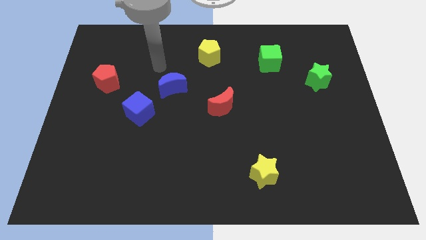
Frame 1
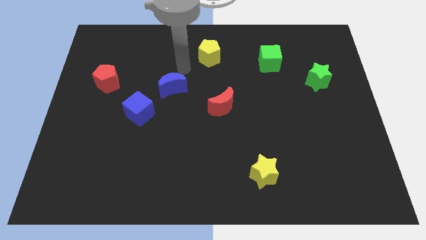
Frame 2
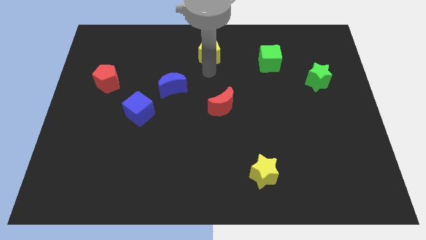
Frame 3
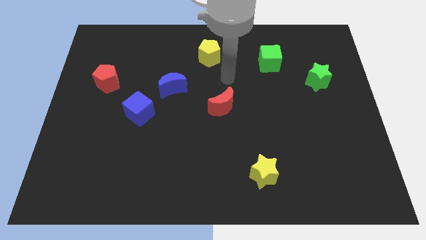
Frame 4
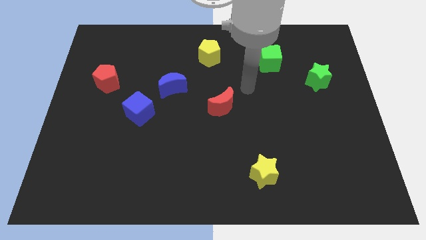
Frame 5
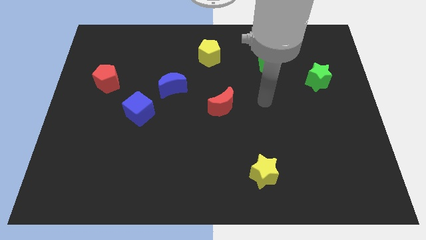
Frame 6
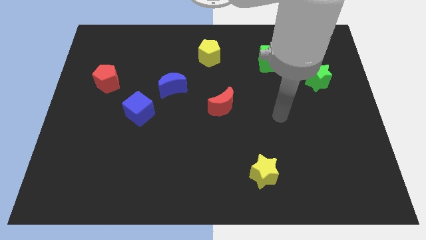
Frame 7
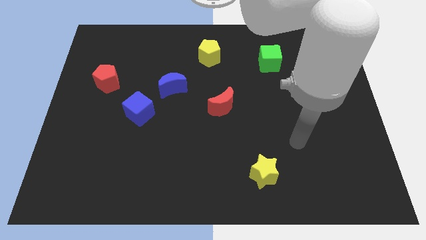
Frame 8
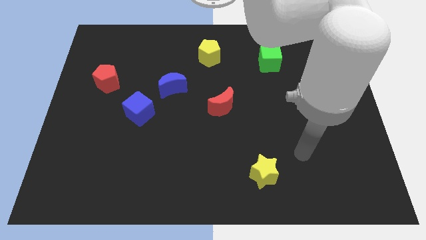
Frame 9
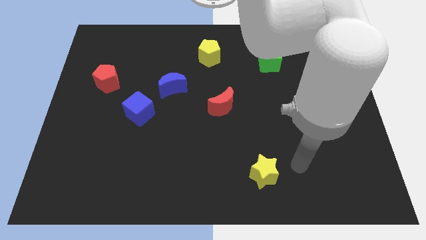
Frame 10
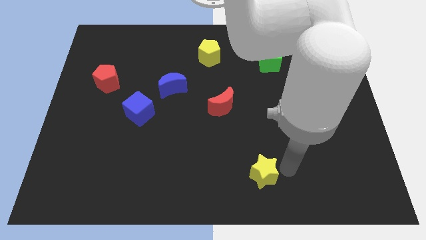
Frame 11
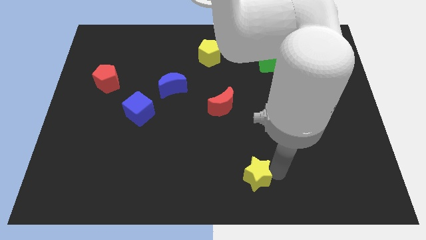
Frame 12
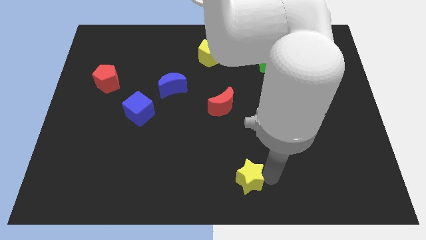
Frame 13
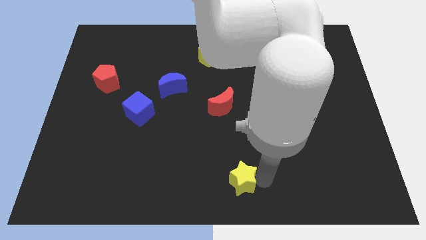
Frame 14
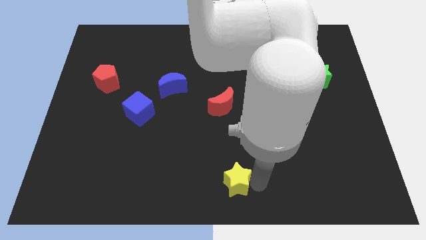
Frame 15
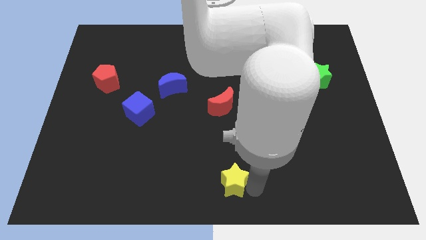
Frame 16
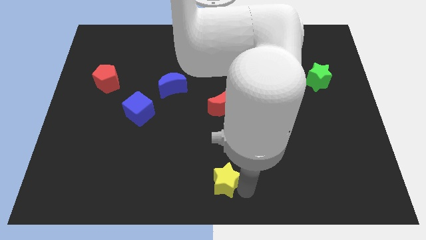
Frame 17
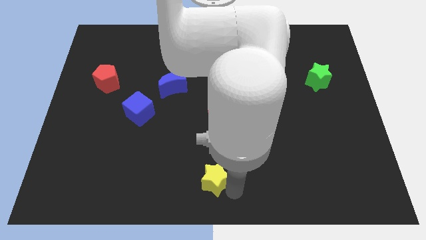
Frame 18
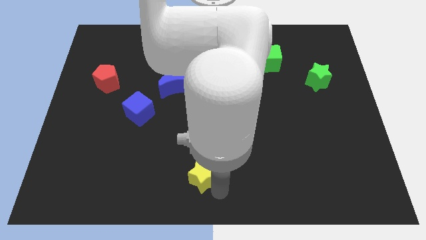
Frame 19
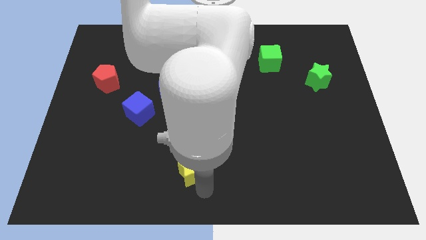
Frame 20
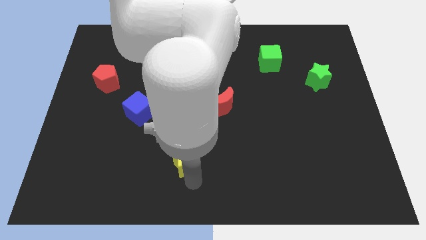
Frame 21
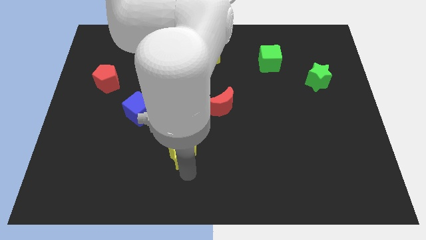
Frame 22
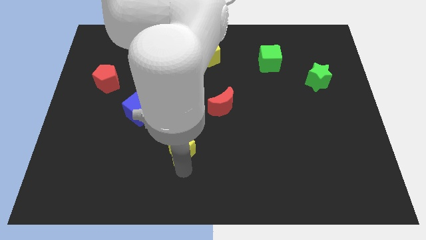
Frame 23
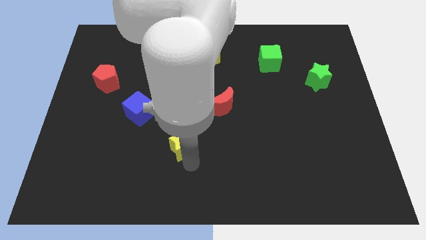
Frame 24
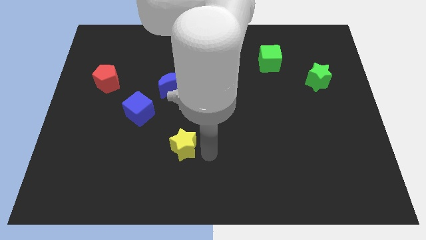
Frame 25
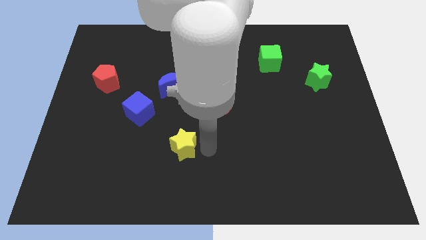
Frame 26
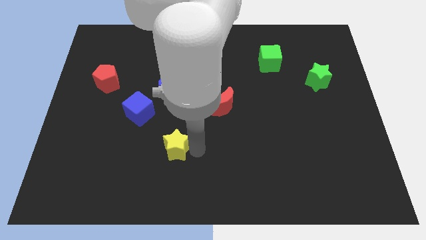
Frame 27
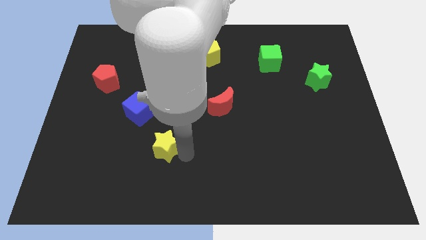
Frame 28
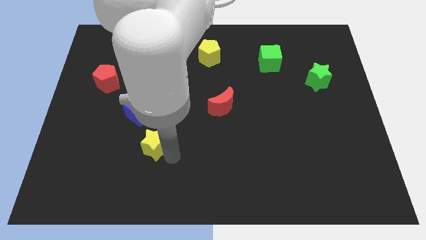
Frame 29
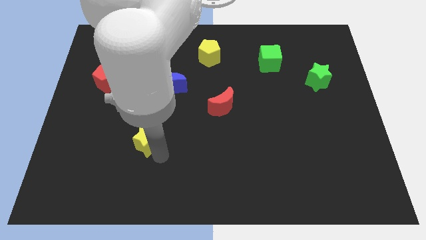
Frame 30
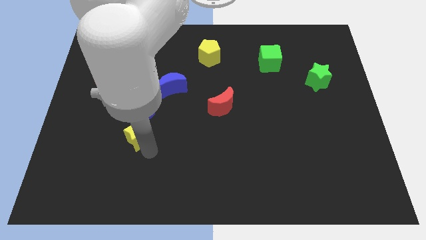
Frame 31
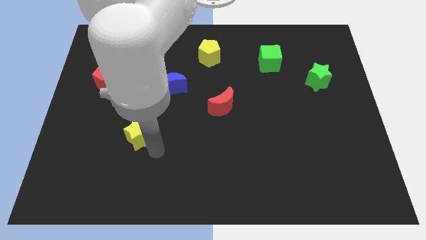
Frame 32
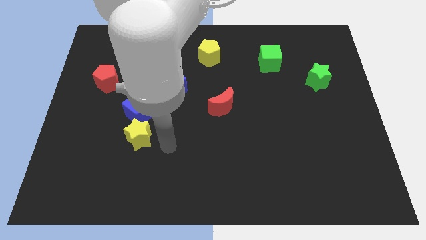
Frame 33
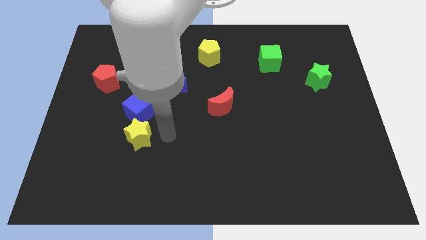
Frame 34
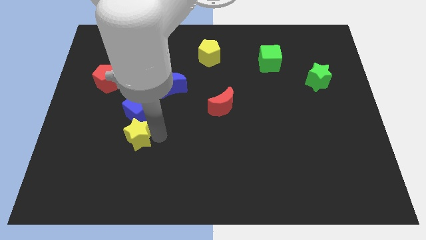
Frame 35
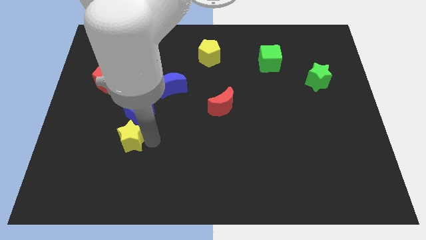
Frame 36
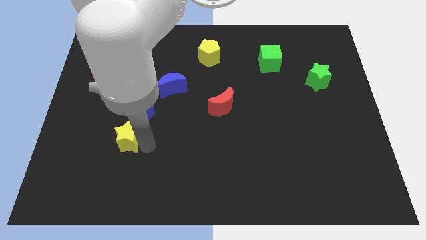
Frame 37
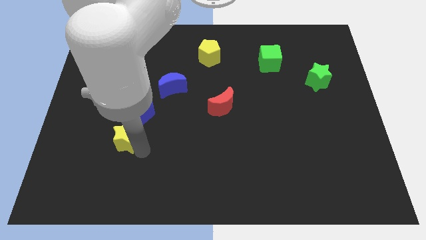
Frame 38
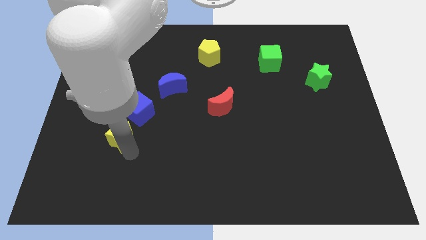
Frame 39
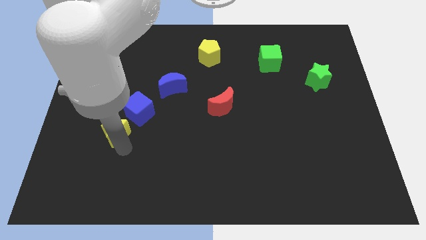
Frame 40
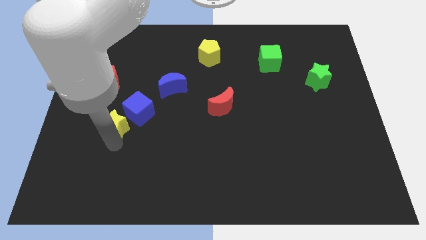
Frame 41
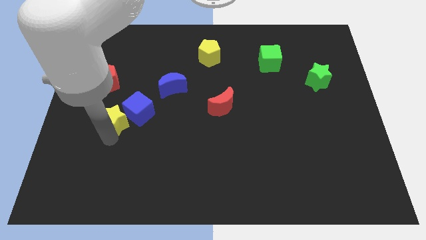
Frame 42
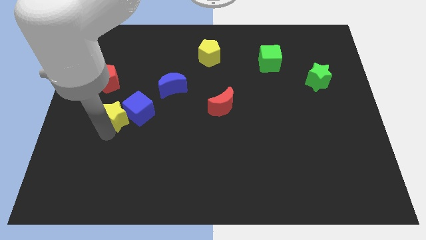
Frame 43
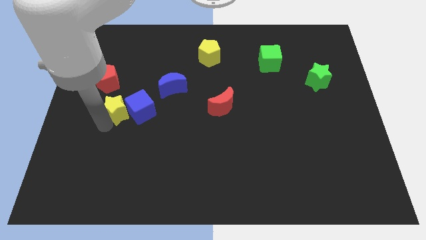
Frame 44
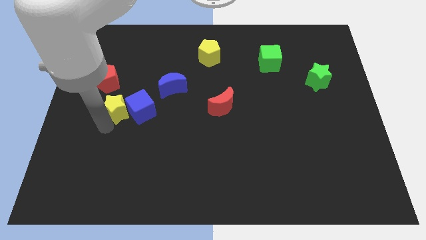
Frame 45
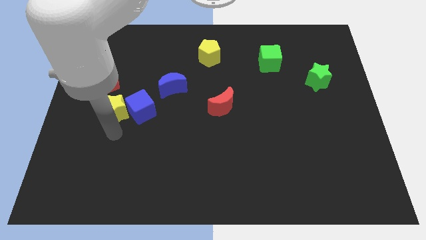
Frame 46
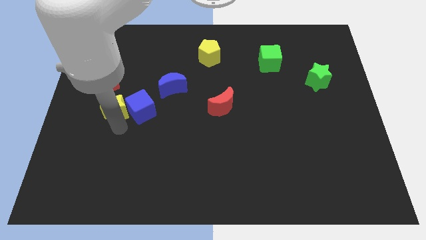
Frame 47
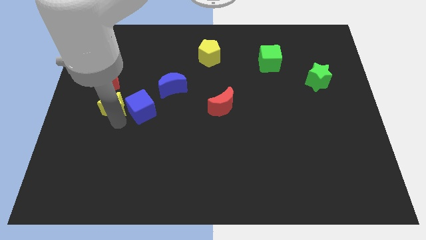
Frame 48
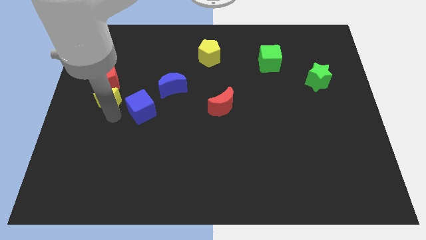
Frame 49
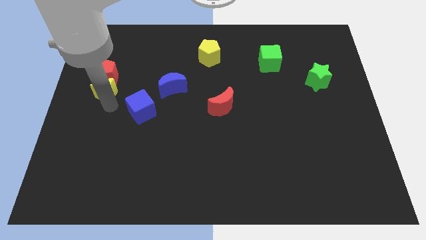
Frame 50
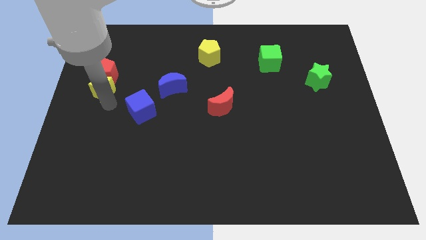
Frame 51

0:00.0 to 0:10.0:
push the yellow star close to the red pentagon

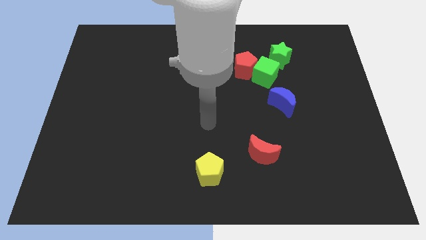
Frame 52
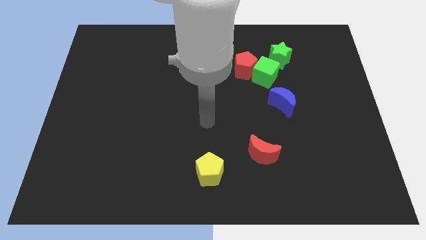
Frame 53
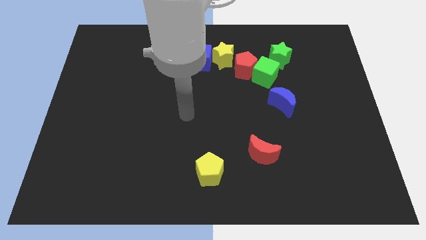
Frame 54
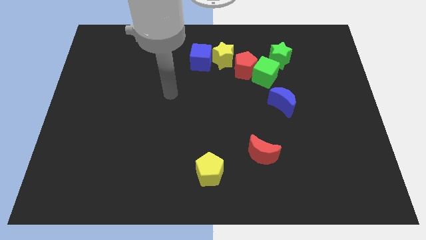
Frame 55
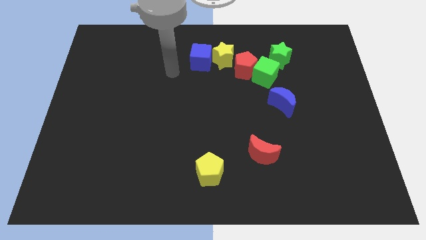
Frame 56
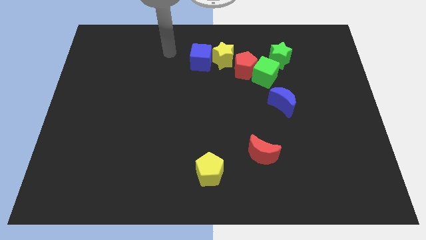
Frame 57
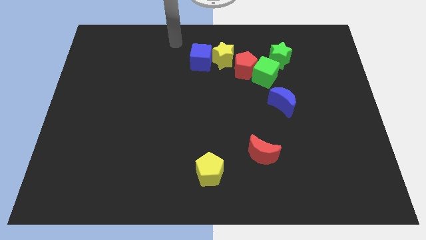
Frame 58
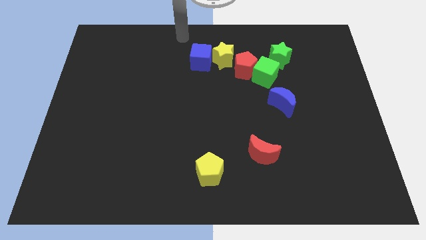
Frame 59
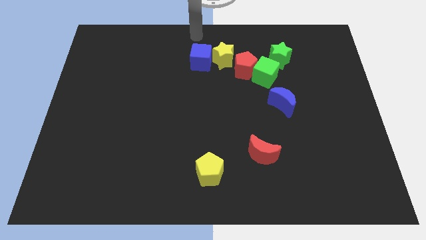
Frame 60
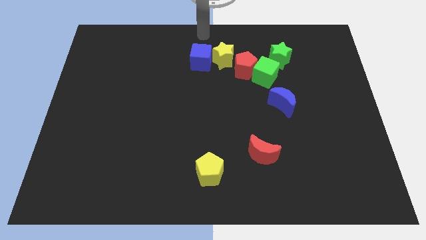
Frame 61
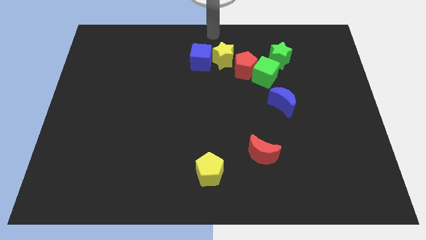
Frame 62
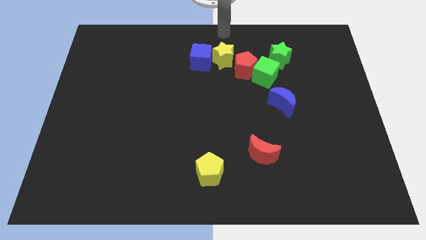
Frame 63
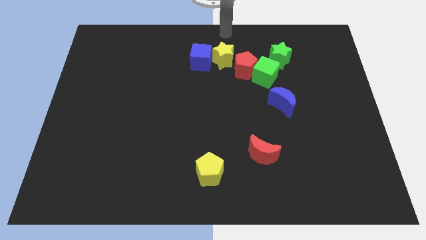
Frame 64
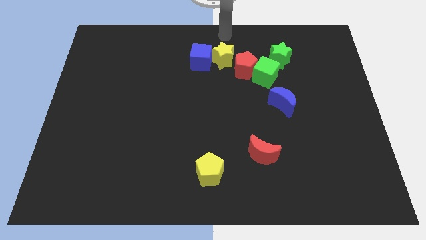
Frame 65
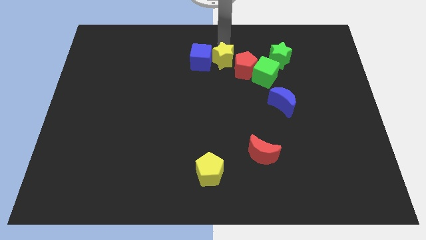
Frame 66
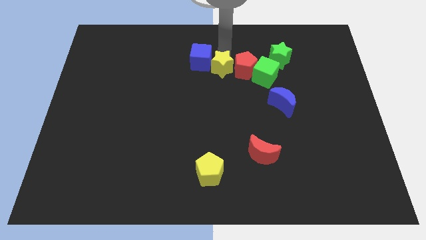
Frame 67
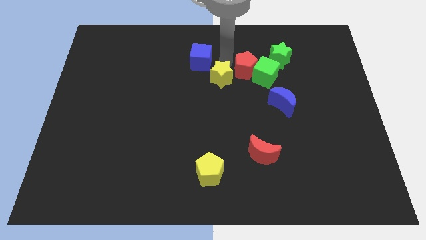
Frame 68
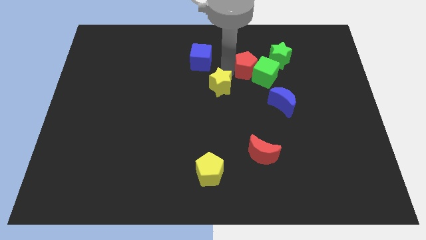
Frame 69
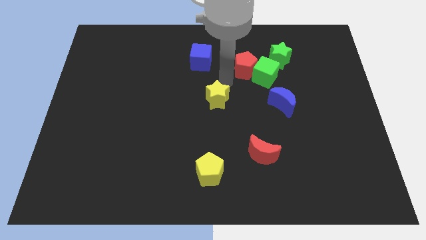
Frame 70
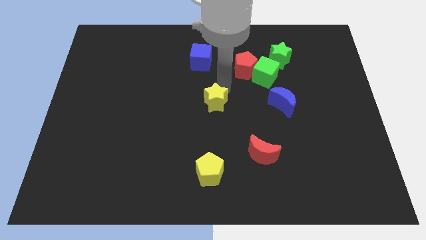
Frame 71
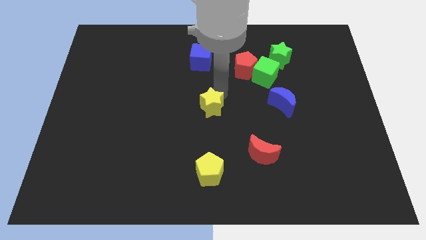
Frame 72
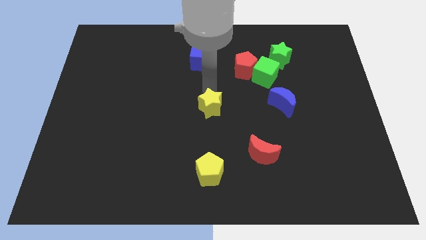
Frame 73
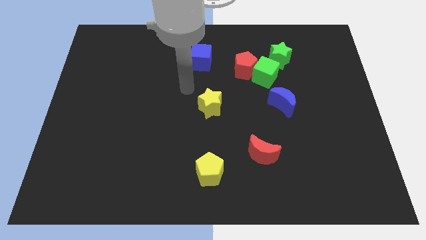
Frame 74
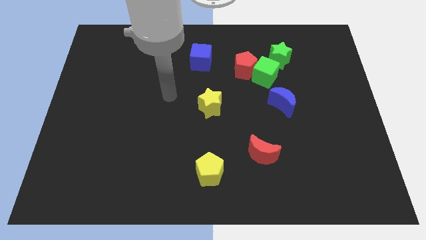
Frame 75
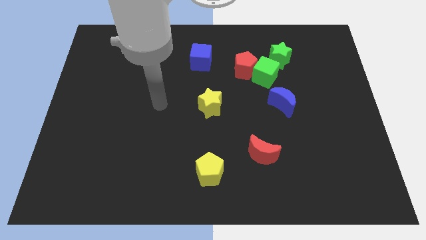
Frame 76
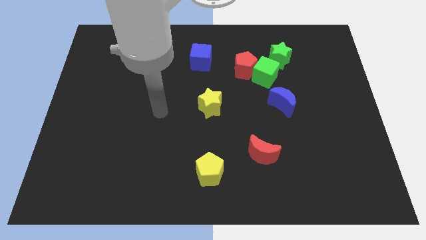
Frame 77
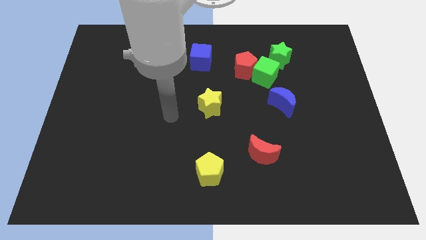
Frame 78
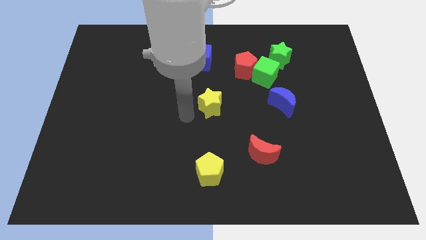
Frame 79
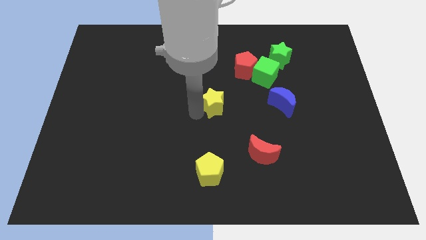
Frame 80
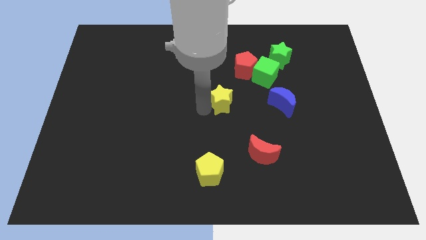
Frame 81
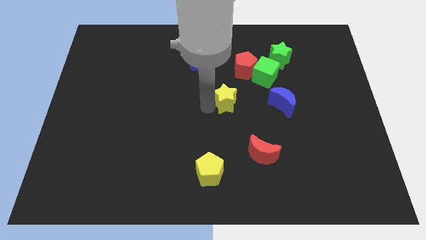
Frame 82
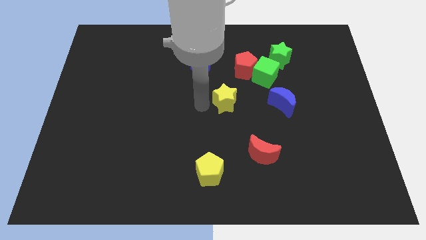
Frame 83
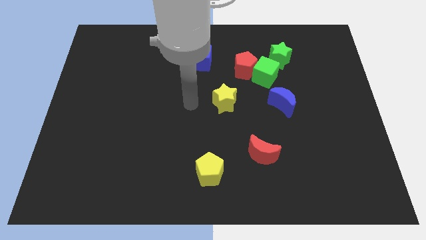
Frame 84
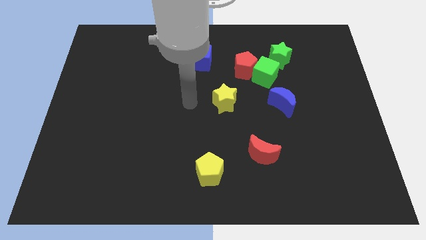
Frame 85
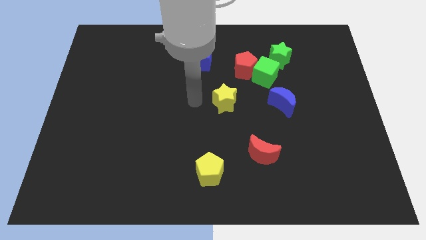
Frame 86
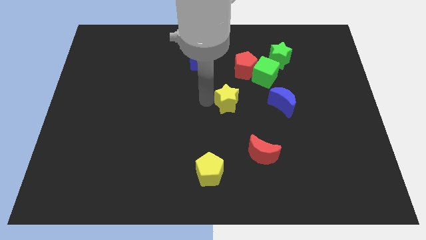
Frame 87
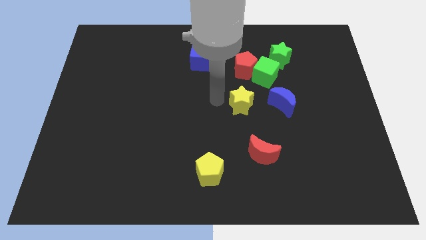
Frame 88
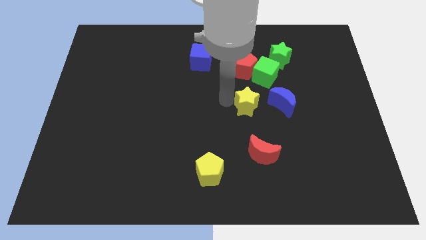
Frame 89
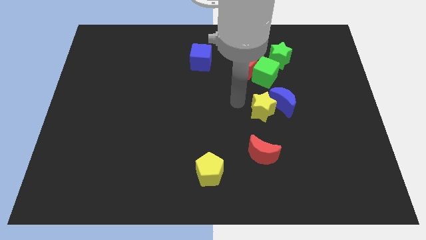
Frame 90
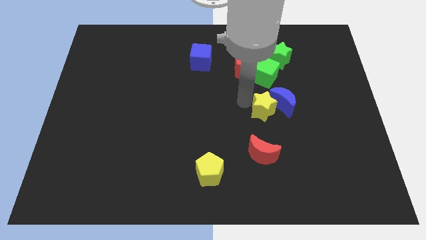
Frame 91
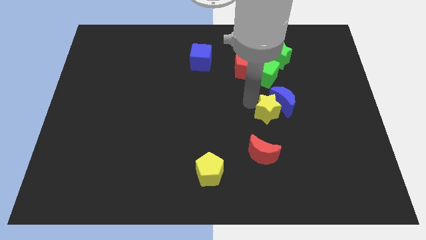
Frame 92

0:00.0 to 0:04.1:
put the yellow star next to the blue moon
